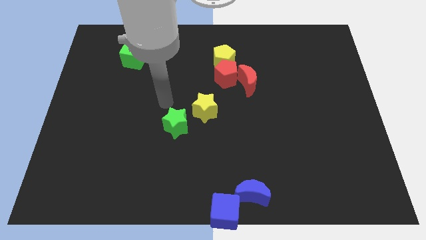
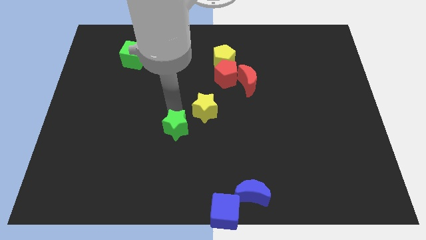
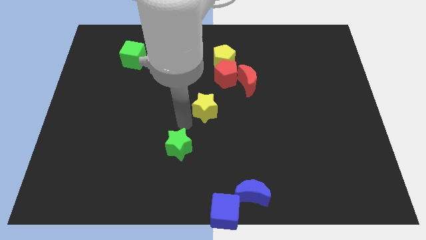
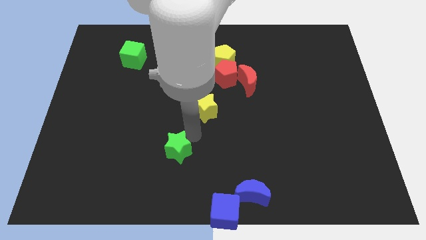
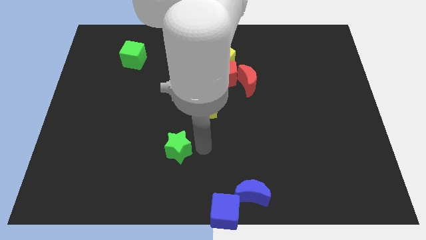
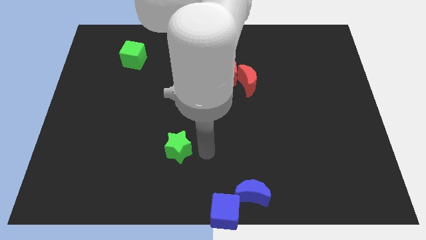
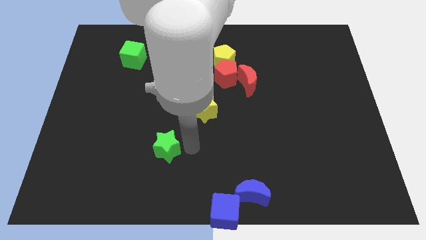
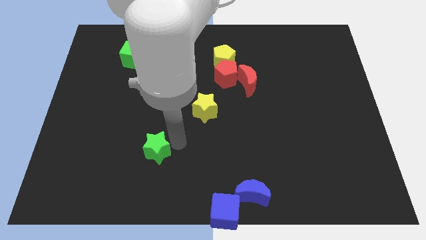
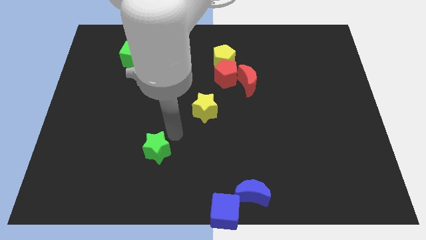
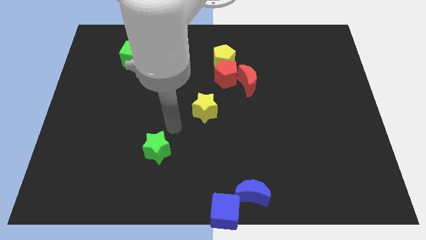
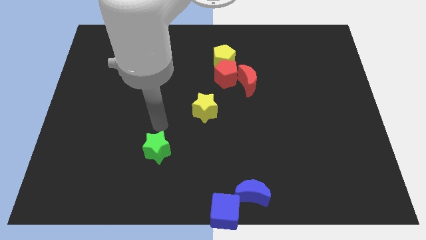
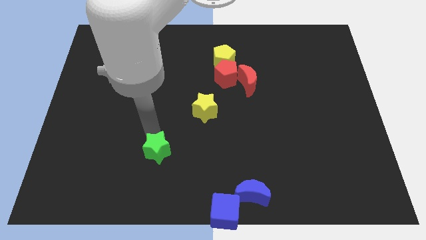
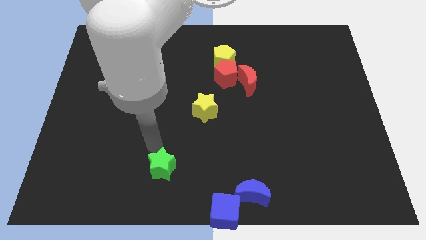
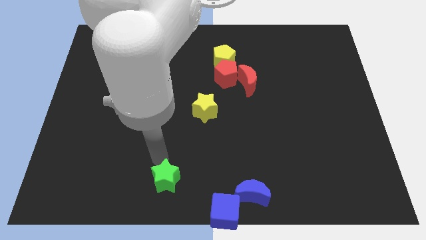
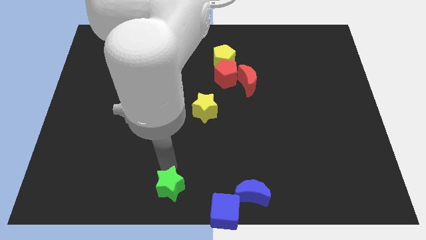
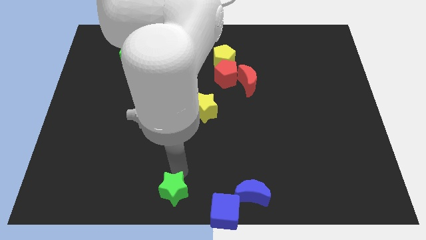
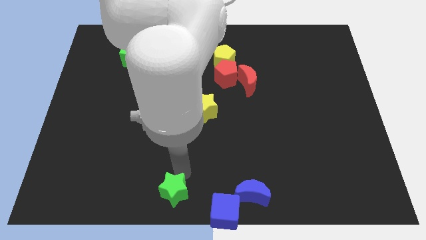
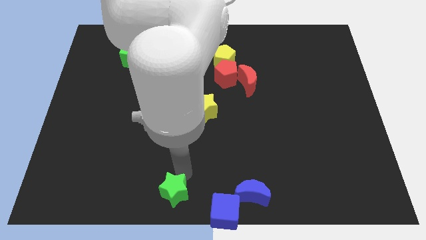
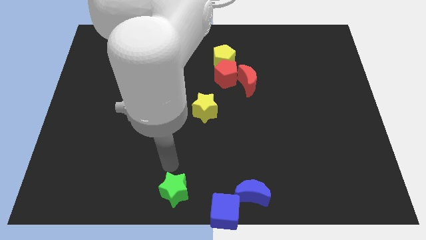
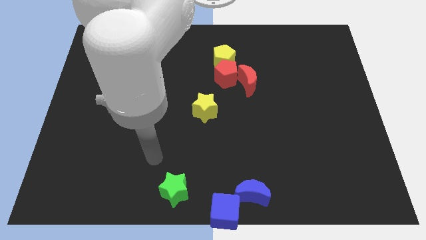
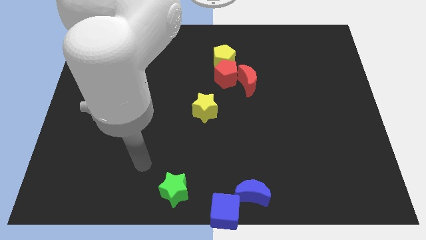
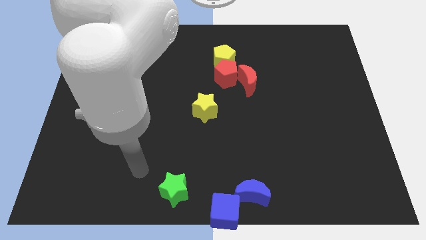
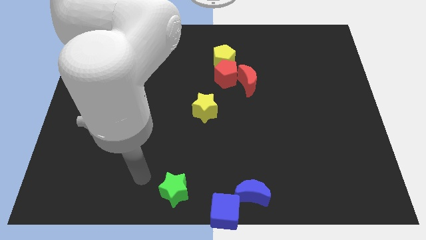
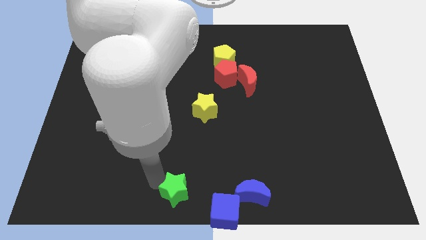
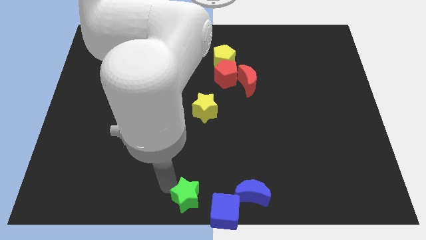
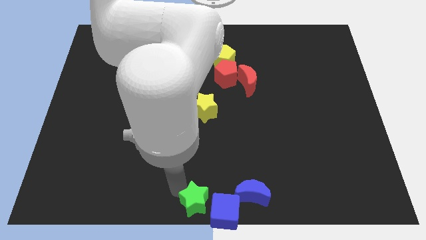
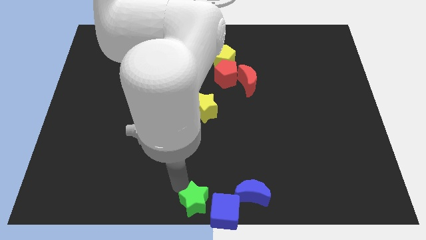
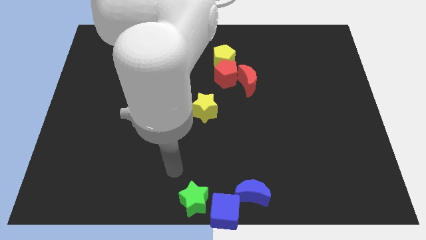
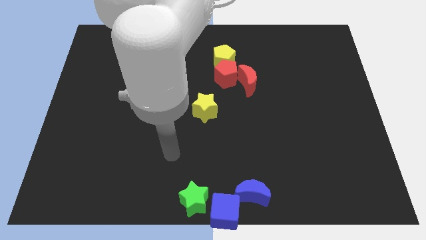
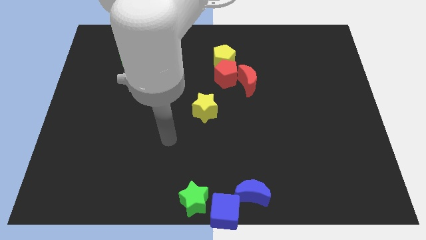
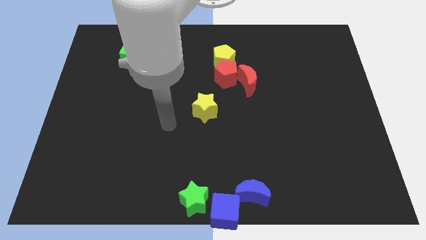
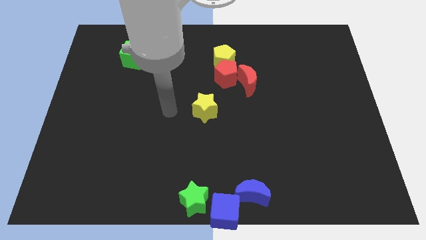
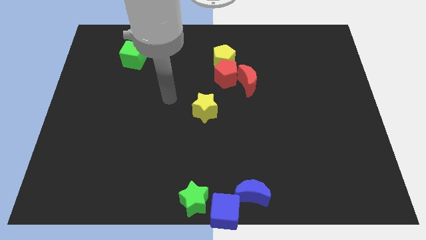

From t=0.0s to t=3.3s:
move green star to the left of blue cube

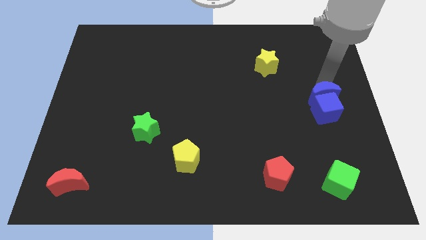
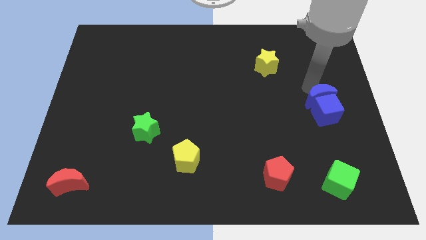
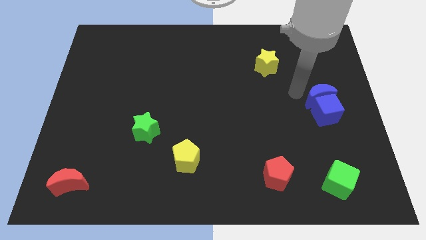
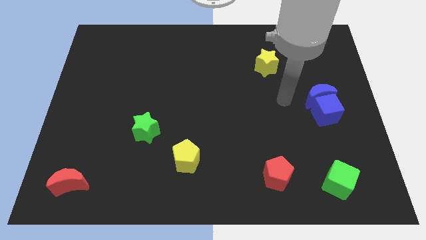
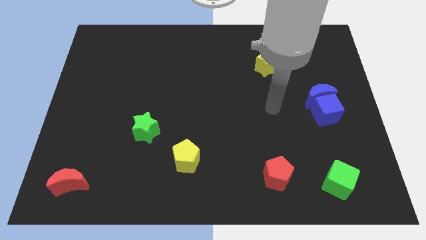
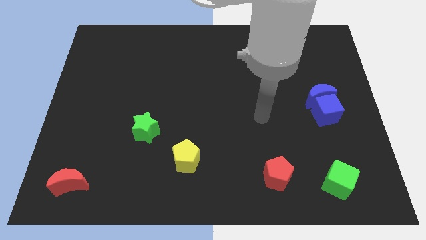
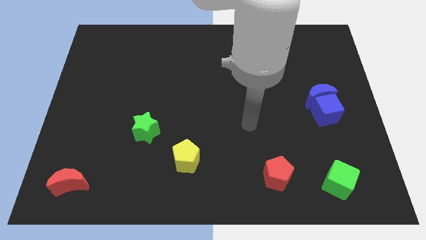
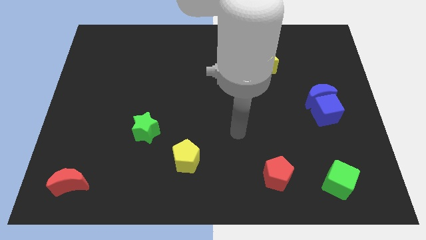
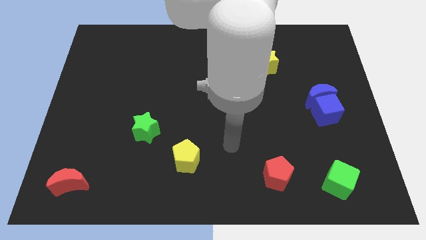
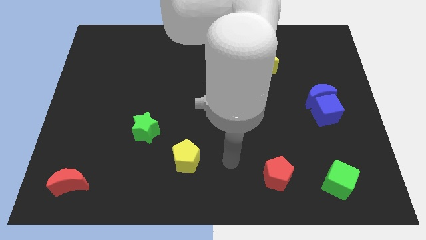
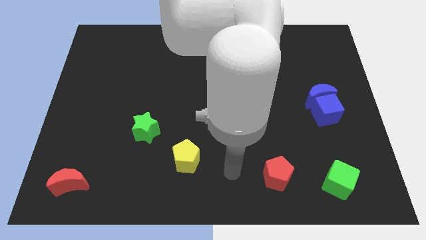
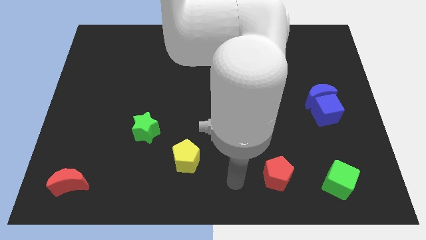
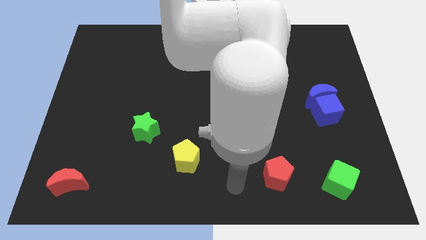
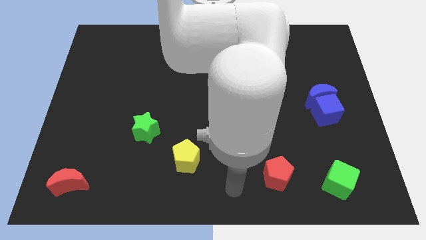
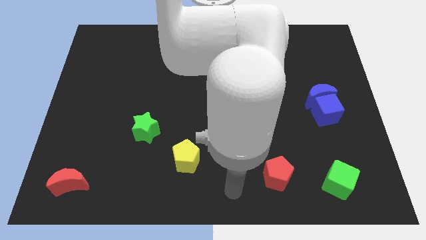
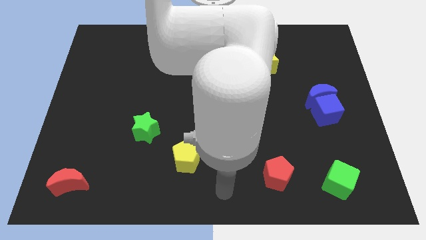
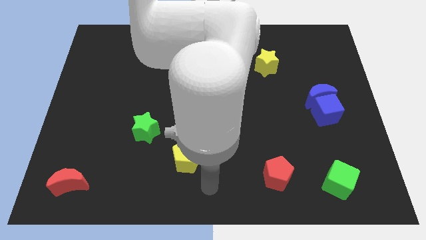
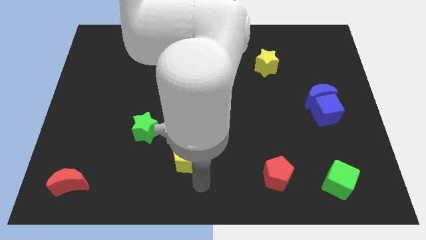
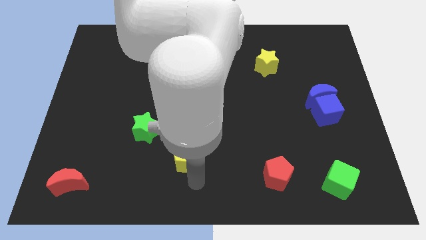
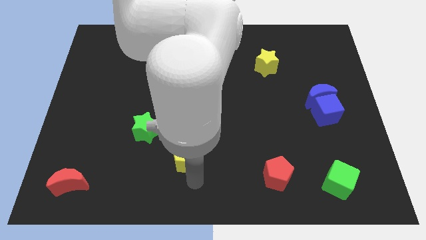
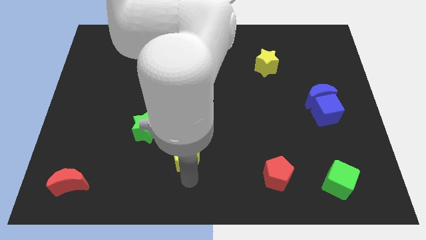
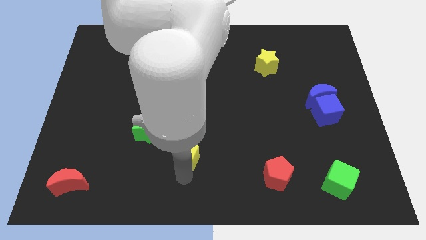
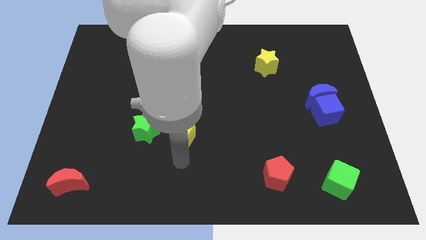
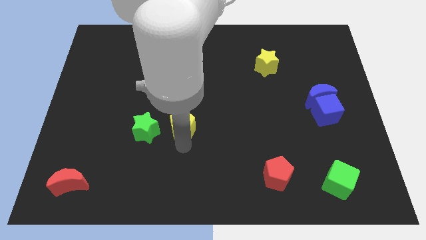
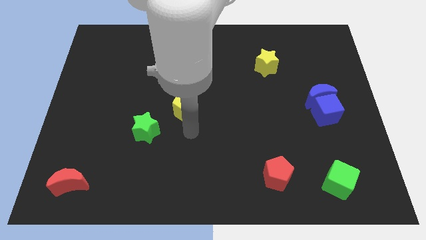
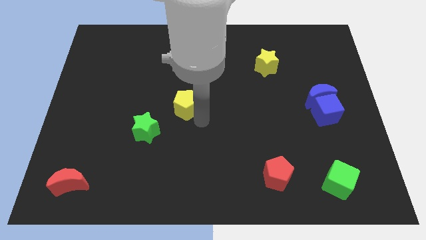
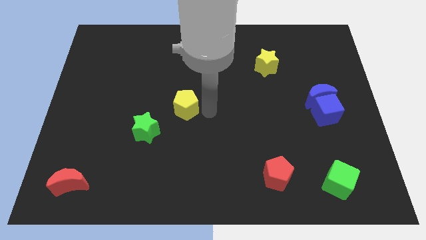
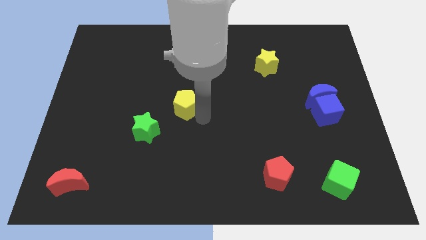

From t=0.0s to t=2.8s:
push the yellow pentagon to the top right of the green star

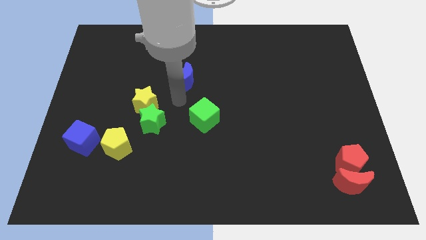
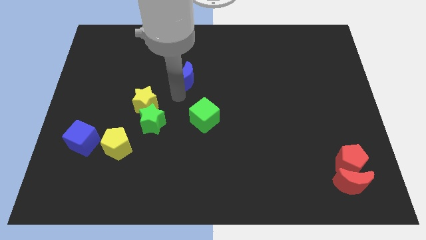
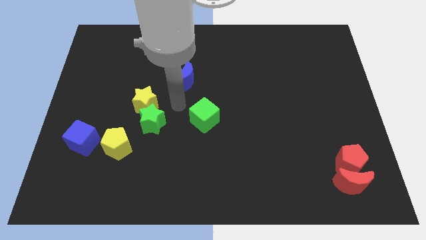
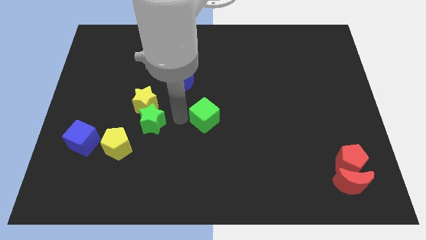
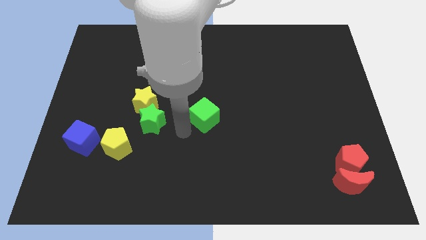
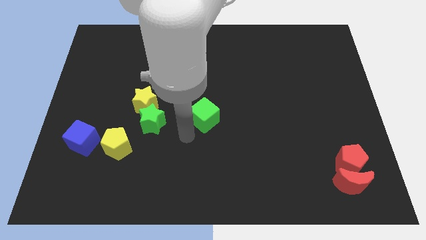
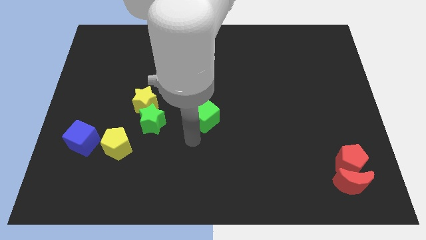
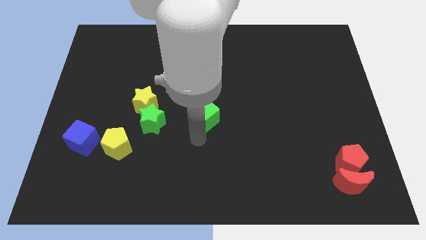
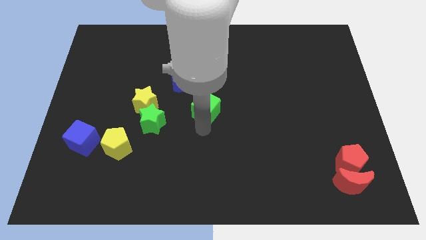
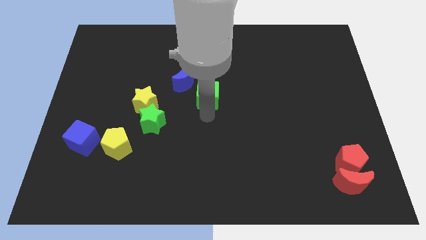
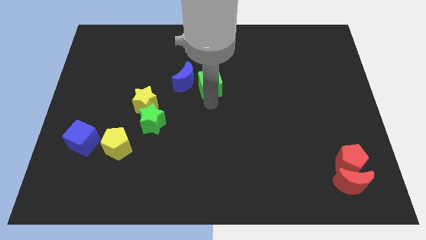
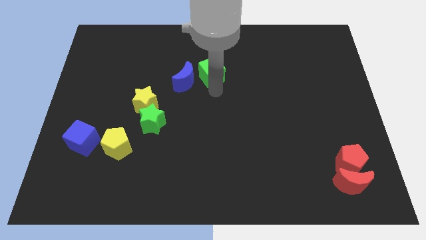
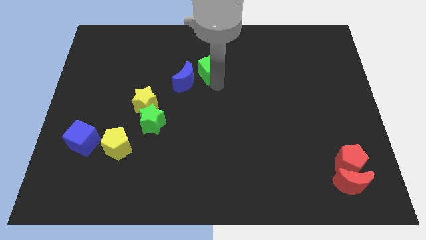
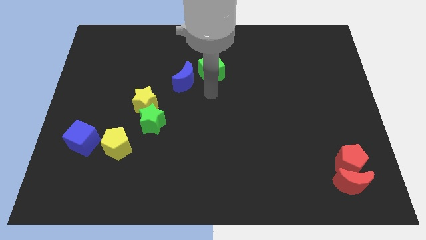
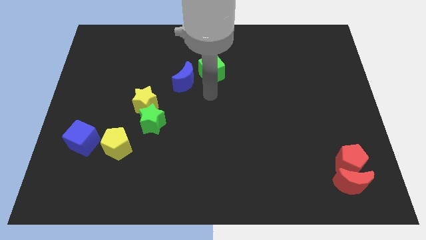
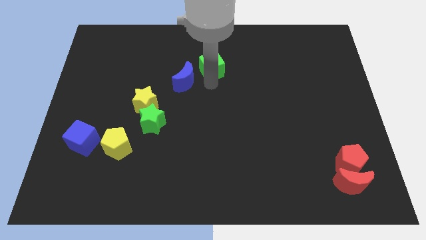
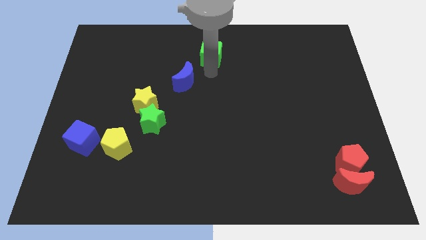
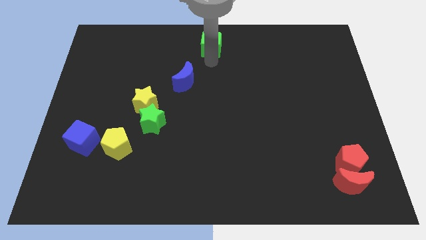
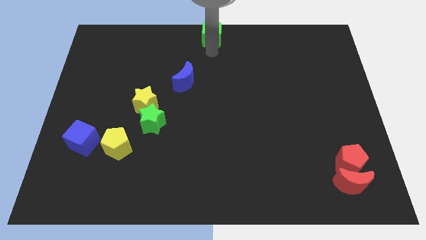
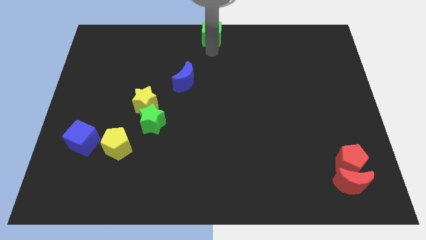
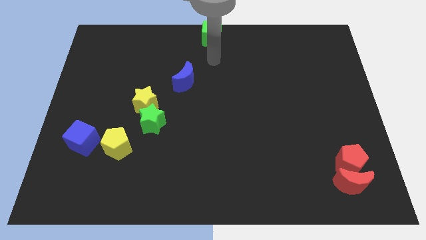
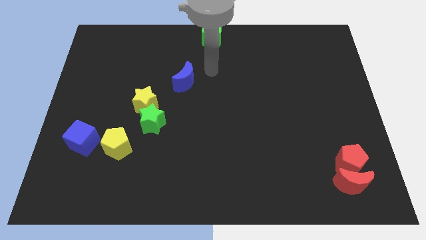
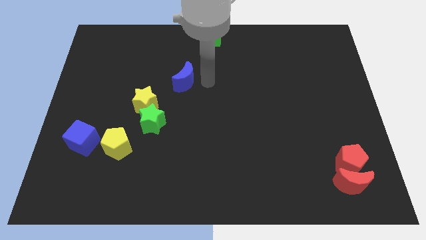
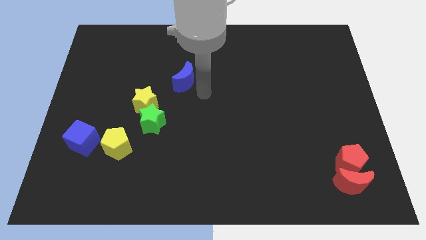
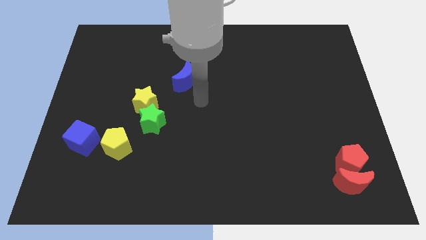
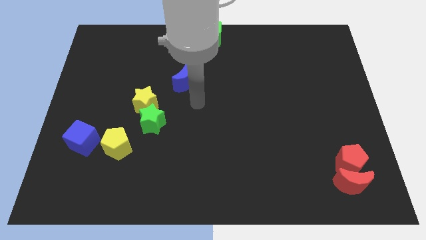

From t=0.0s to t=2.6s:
push the green cube to the top center of the board

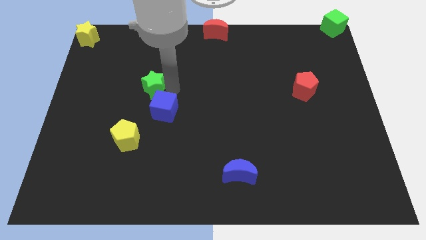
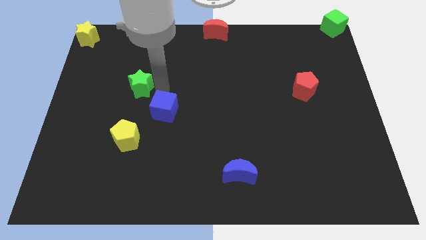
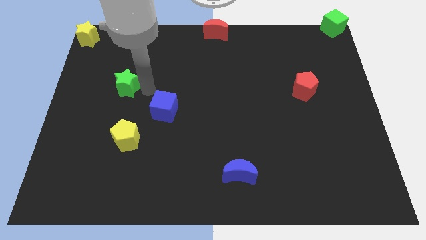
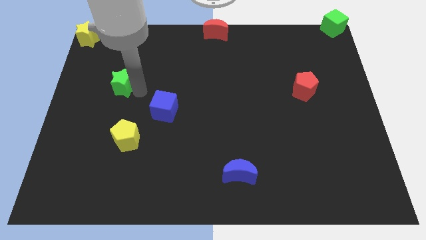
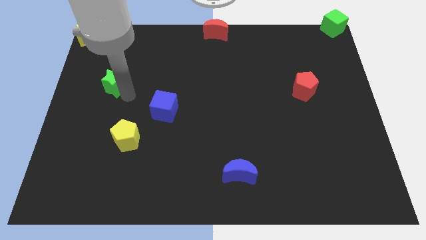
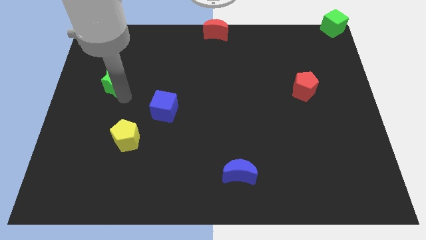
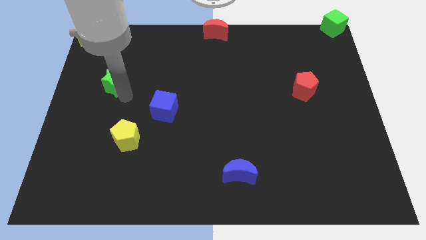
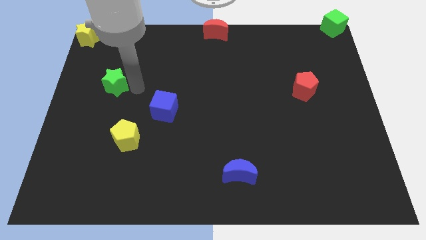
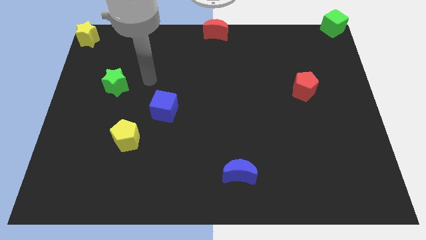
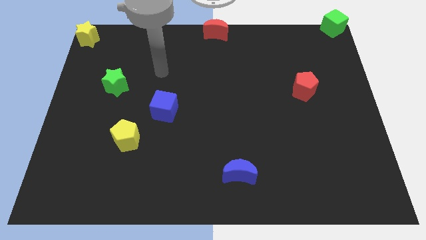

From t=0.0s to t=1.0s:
put the green star diagonally to yellow star
